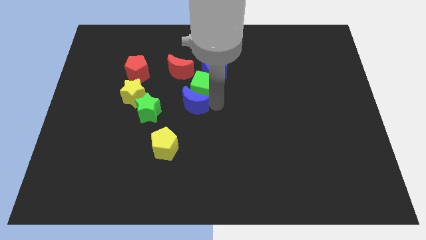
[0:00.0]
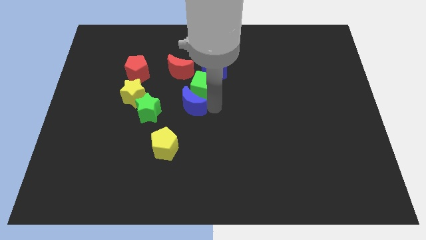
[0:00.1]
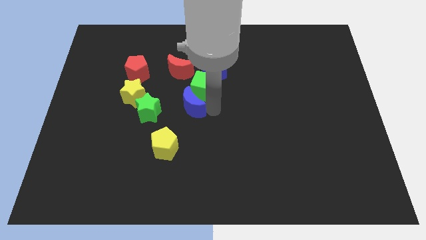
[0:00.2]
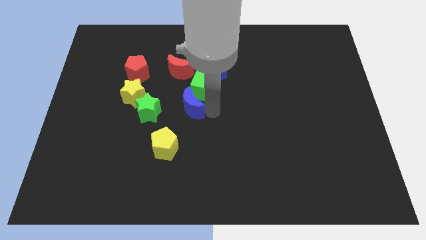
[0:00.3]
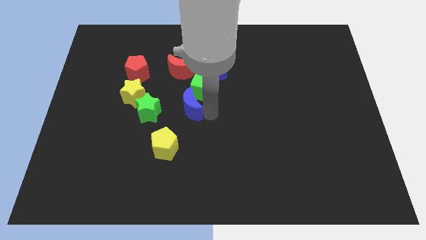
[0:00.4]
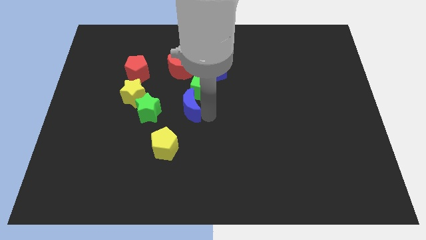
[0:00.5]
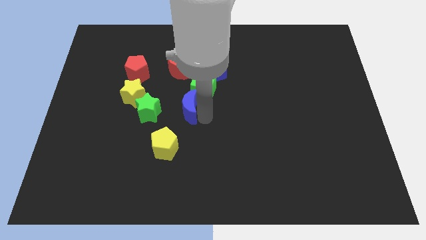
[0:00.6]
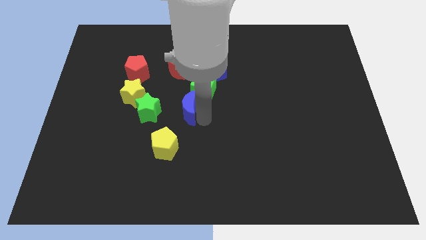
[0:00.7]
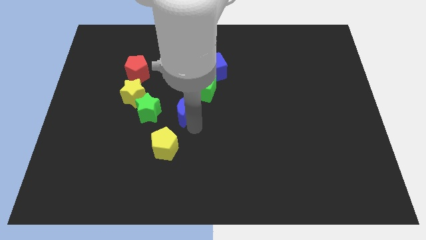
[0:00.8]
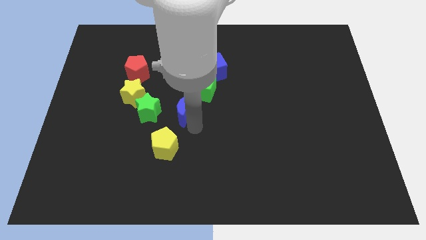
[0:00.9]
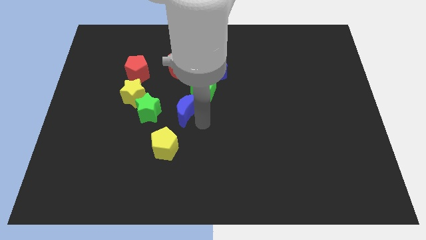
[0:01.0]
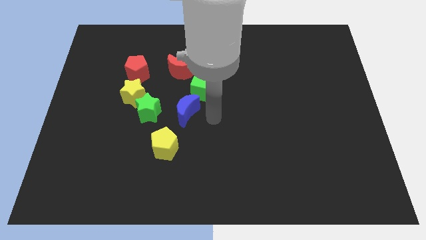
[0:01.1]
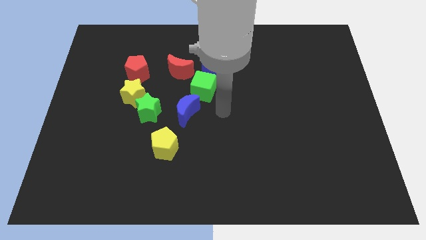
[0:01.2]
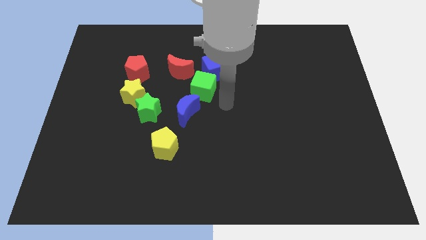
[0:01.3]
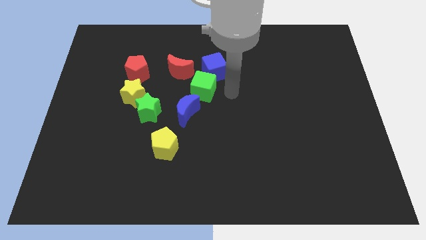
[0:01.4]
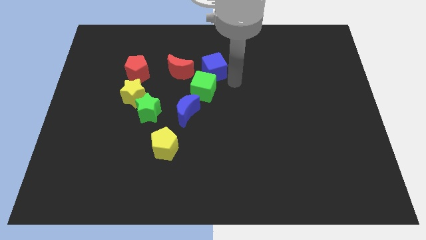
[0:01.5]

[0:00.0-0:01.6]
move the blue moon slightly down

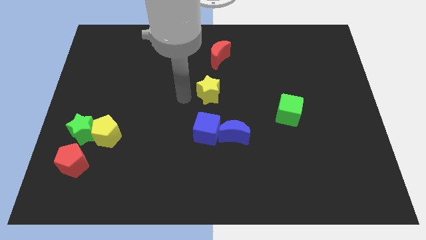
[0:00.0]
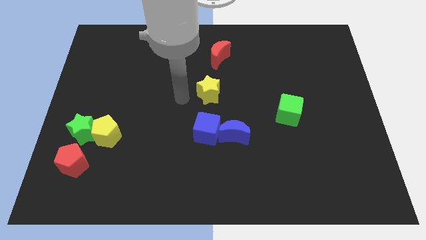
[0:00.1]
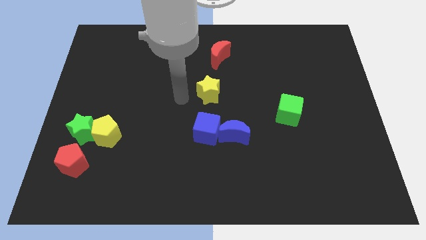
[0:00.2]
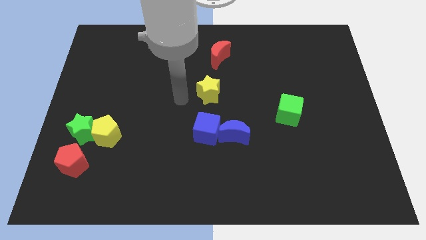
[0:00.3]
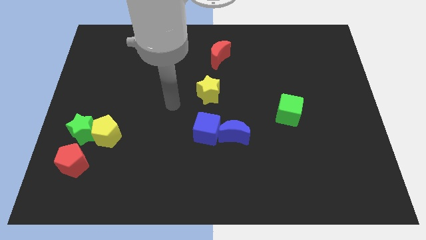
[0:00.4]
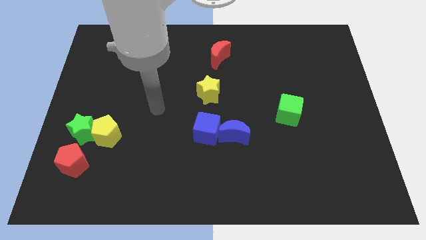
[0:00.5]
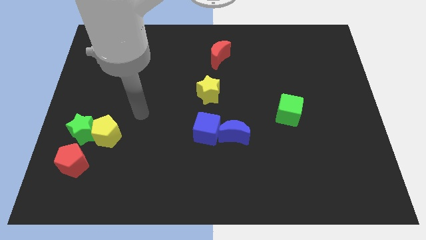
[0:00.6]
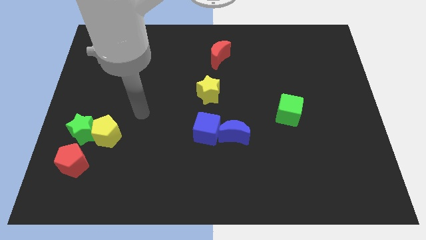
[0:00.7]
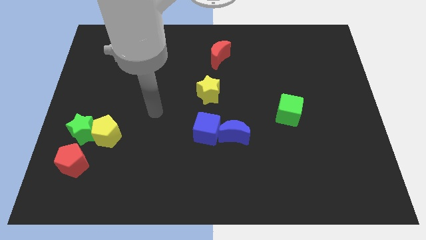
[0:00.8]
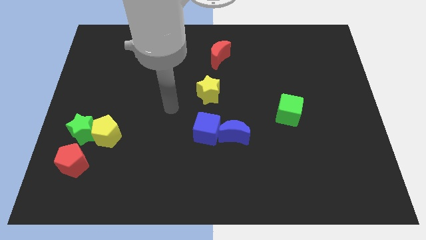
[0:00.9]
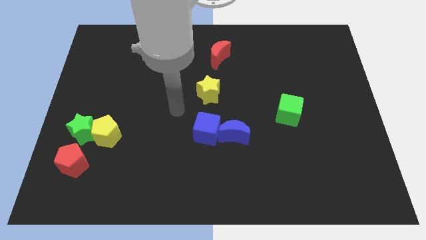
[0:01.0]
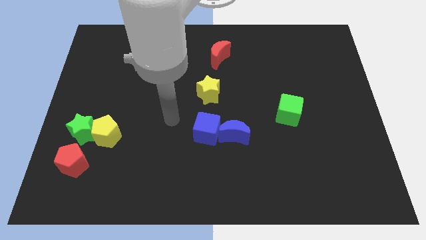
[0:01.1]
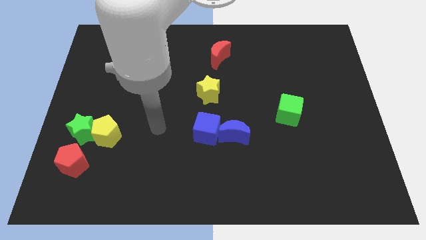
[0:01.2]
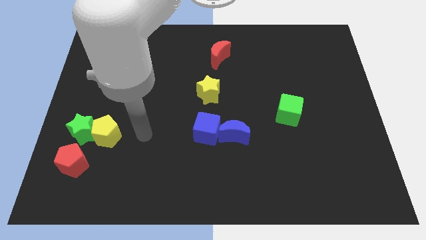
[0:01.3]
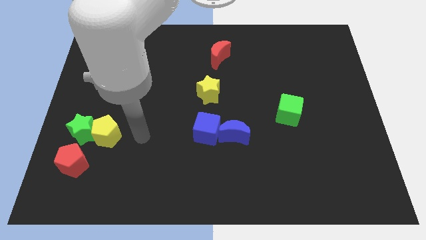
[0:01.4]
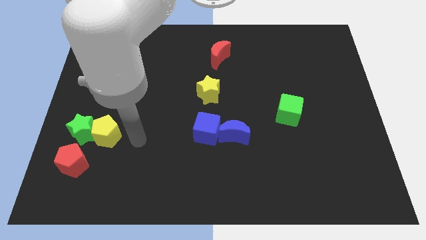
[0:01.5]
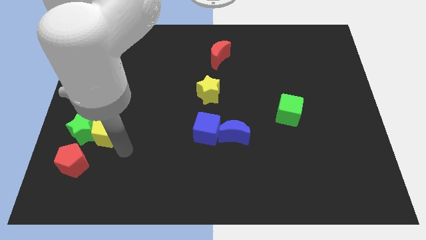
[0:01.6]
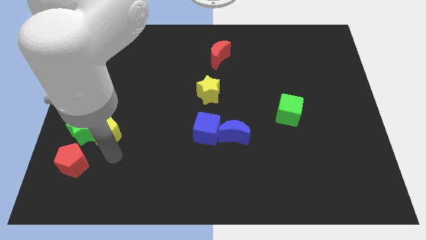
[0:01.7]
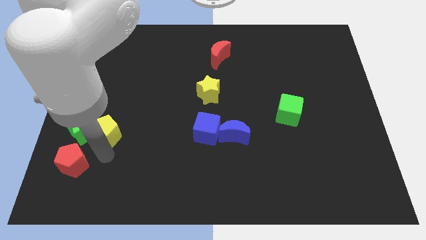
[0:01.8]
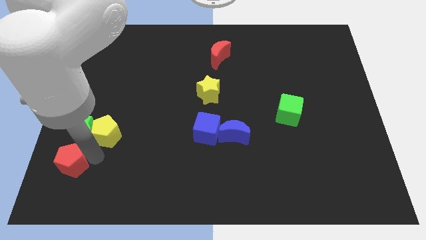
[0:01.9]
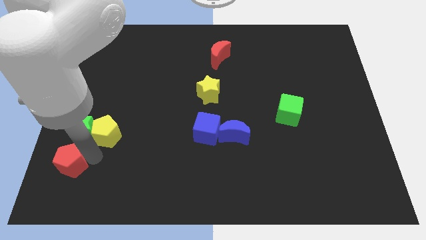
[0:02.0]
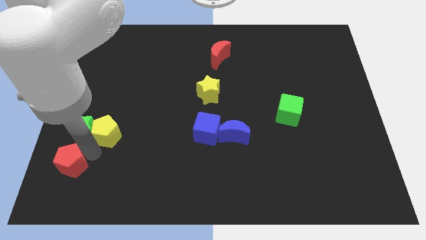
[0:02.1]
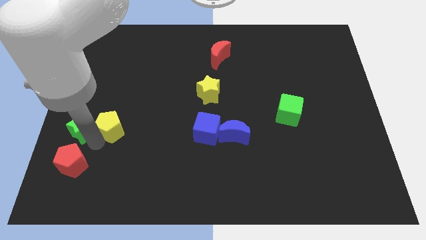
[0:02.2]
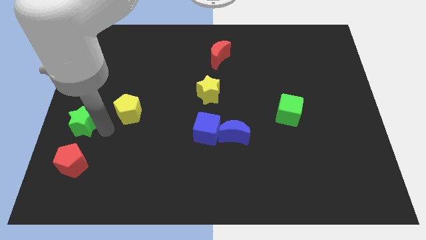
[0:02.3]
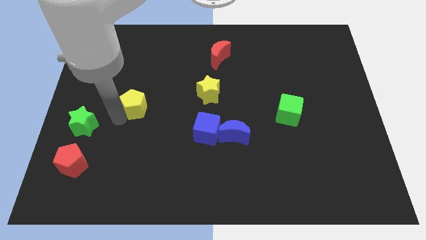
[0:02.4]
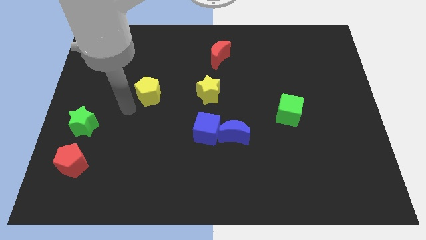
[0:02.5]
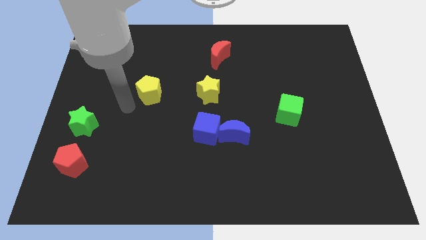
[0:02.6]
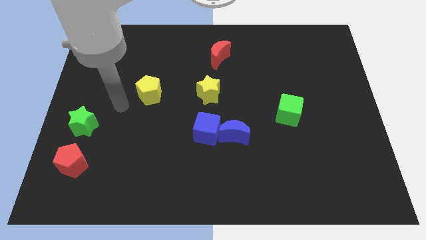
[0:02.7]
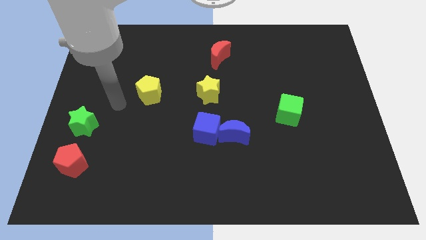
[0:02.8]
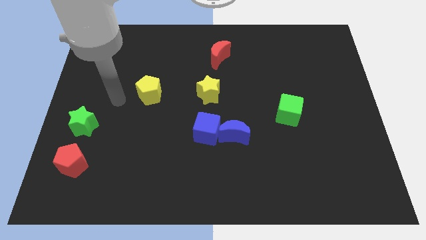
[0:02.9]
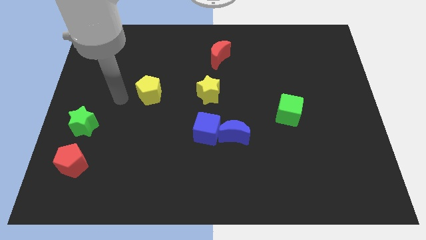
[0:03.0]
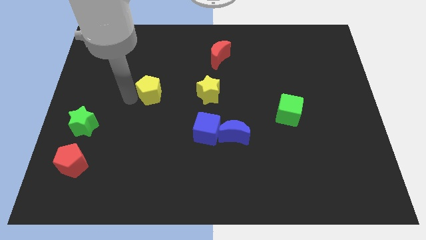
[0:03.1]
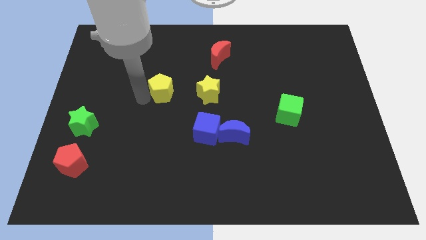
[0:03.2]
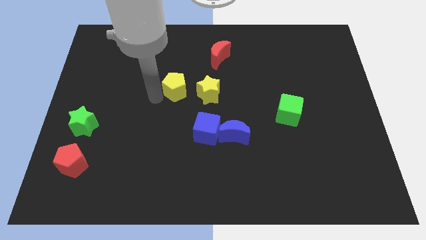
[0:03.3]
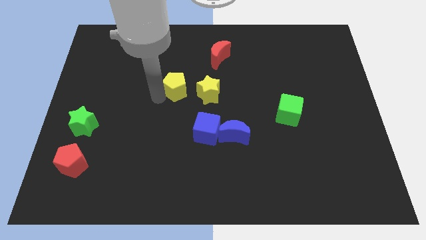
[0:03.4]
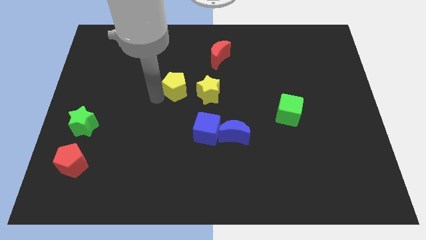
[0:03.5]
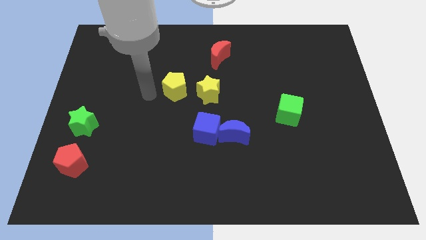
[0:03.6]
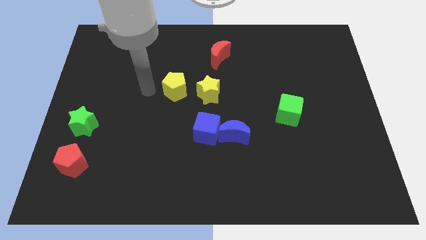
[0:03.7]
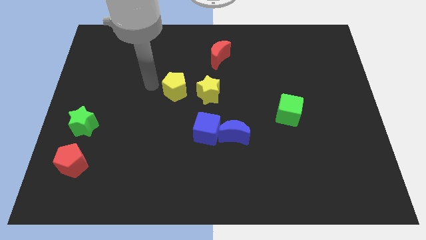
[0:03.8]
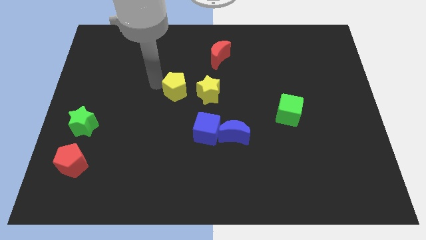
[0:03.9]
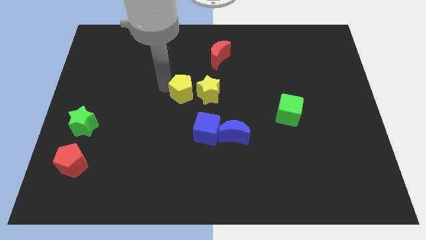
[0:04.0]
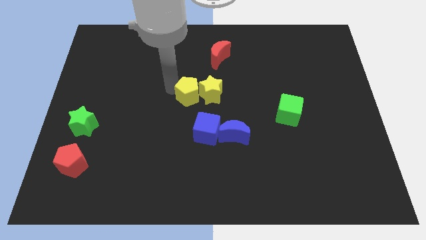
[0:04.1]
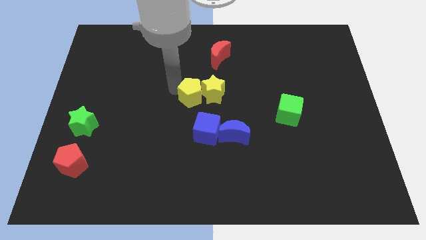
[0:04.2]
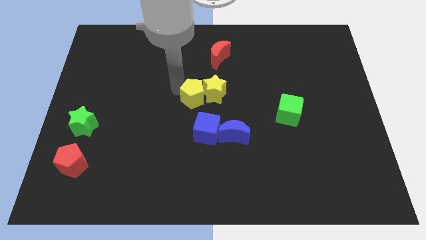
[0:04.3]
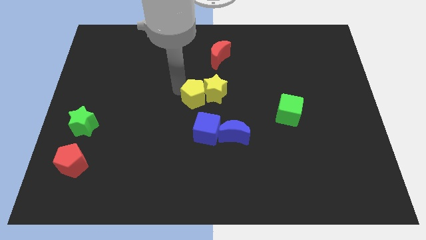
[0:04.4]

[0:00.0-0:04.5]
move the yellow pentagon to the left of the yellow star

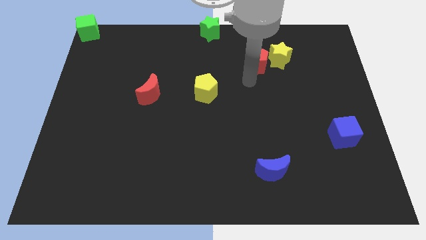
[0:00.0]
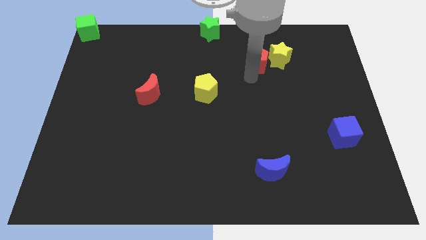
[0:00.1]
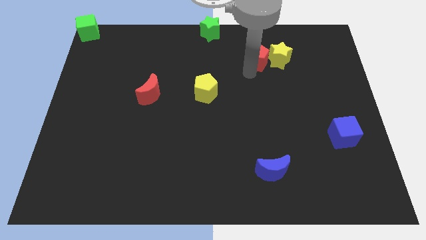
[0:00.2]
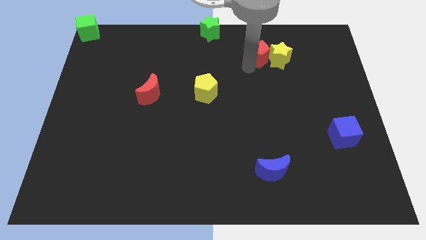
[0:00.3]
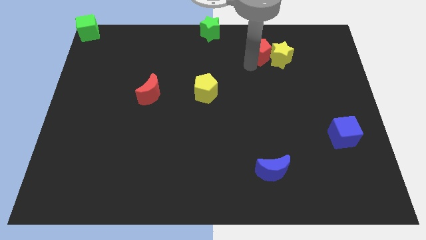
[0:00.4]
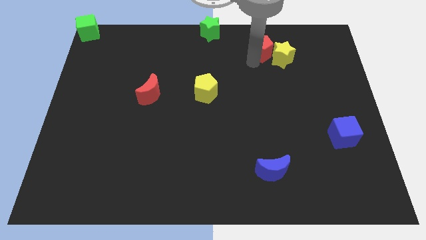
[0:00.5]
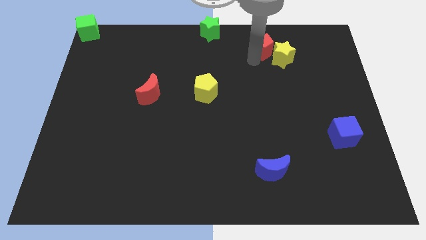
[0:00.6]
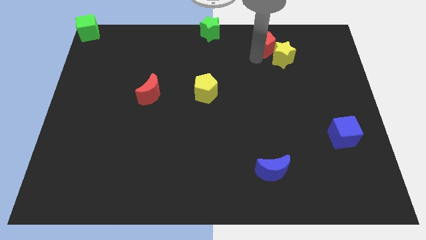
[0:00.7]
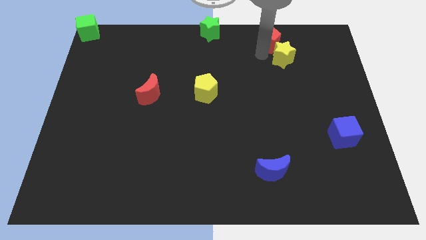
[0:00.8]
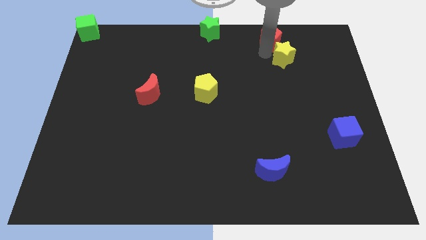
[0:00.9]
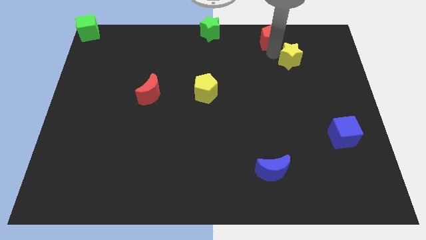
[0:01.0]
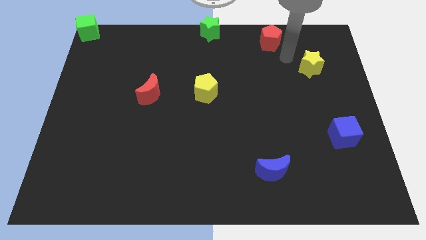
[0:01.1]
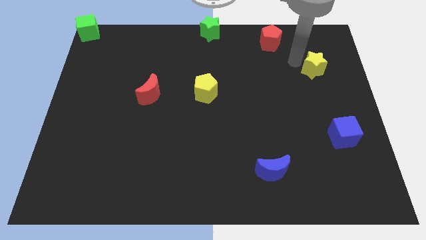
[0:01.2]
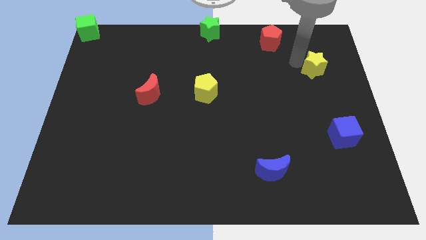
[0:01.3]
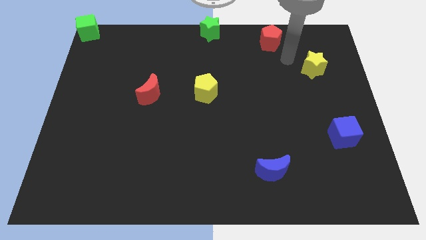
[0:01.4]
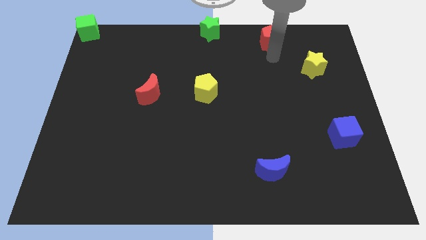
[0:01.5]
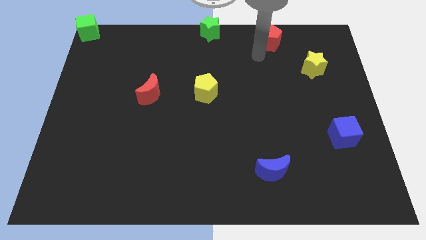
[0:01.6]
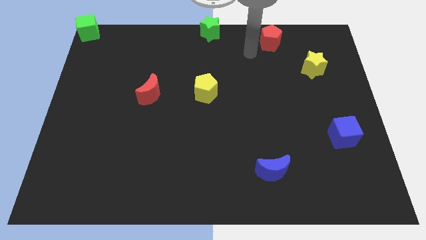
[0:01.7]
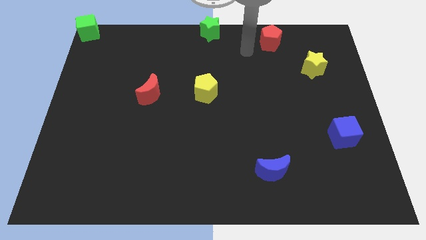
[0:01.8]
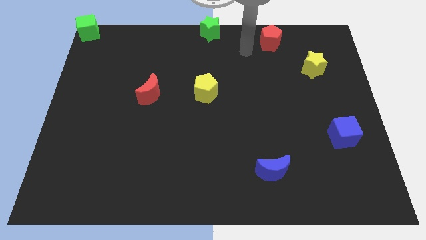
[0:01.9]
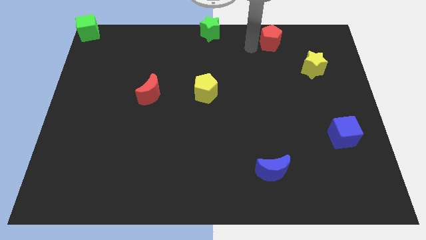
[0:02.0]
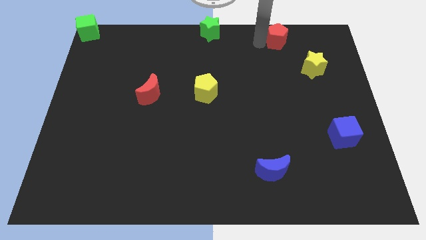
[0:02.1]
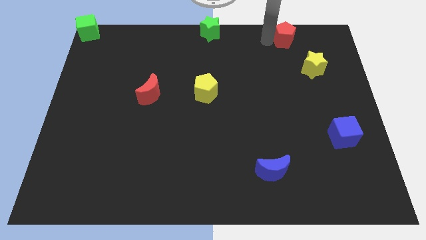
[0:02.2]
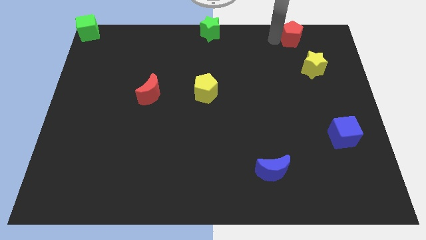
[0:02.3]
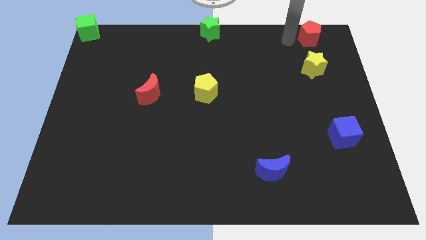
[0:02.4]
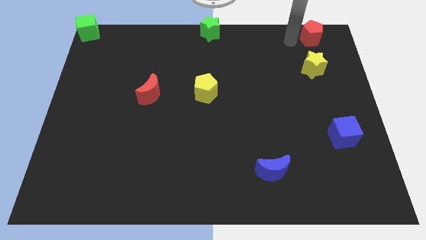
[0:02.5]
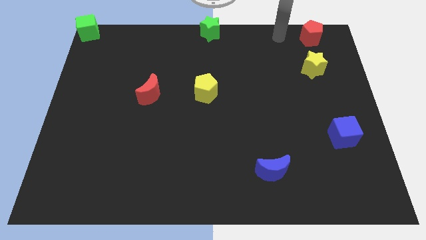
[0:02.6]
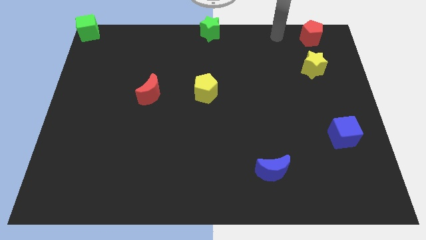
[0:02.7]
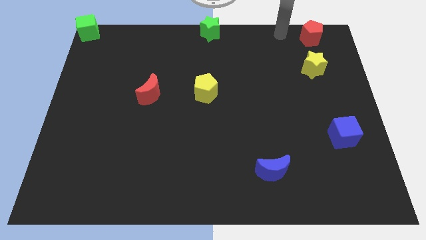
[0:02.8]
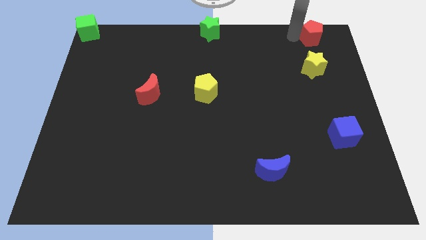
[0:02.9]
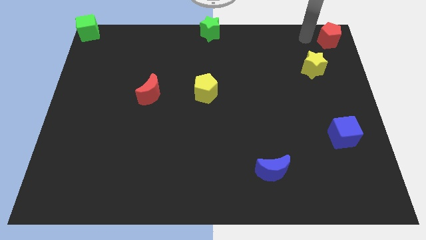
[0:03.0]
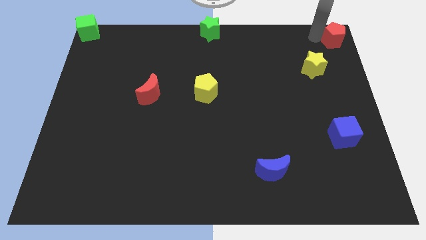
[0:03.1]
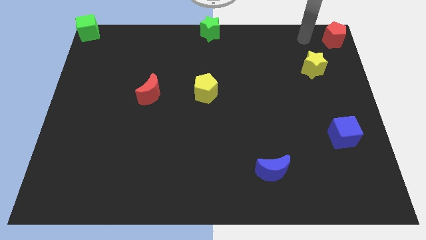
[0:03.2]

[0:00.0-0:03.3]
move the red pentagon to the top right corner of the board
